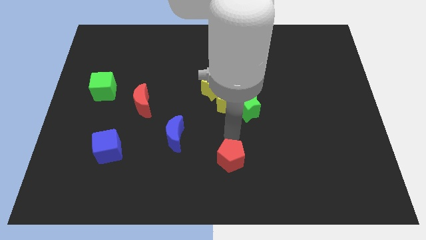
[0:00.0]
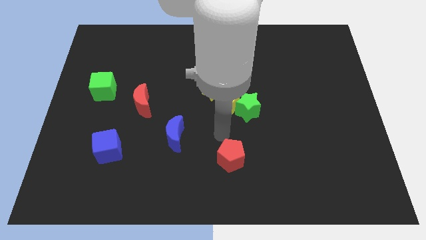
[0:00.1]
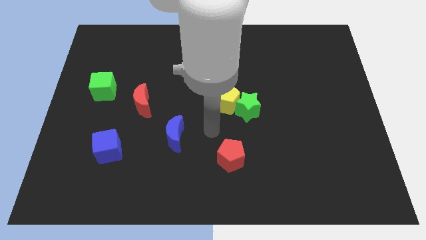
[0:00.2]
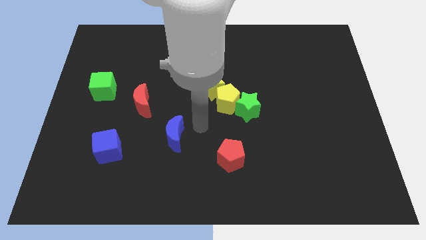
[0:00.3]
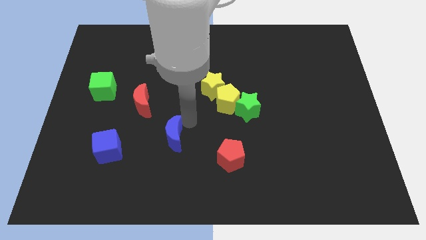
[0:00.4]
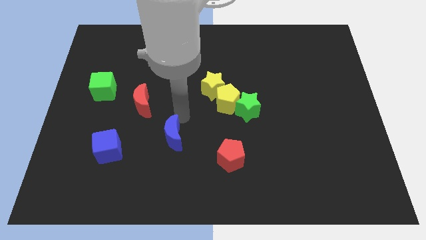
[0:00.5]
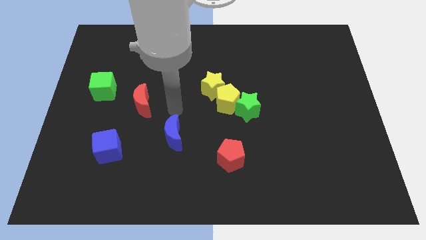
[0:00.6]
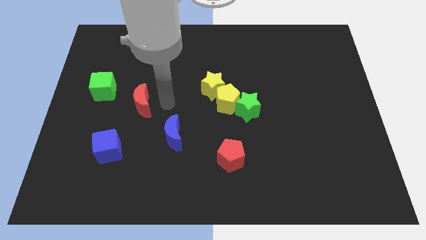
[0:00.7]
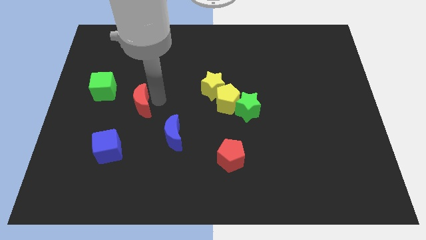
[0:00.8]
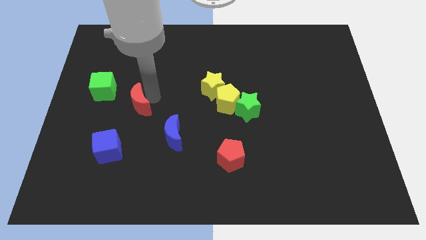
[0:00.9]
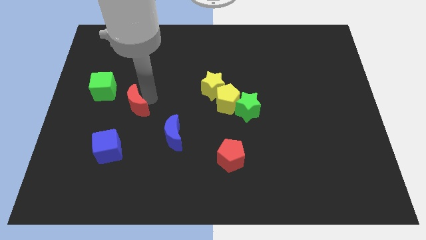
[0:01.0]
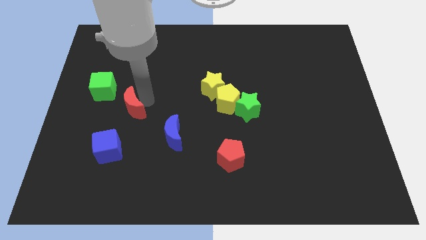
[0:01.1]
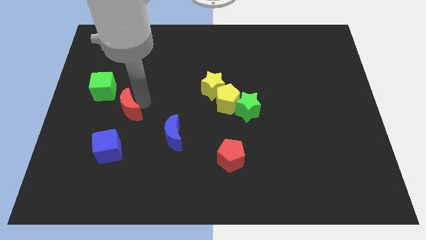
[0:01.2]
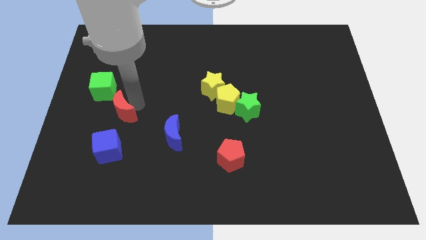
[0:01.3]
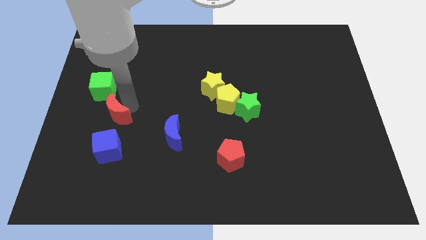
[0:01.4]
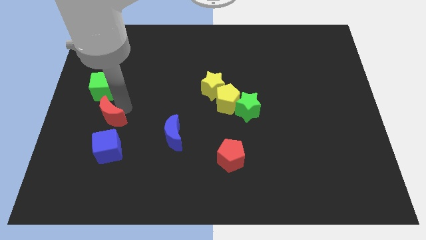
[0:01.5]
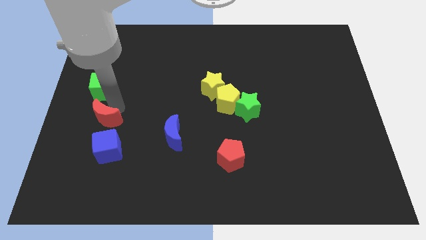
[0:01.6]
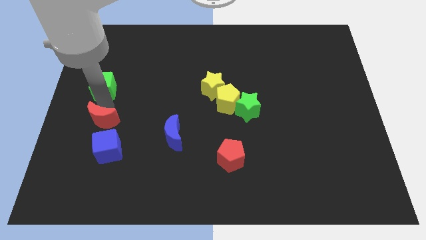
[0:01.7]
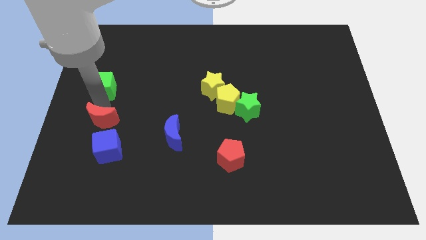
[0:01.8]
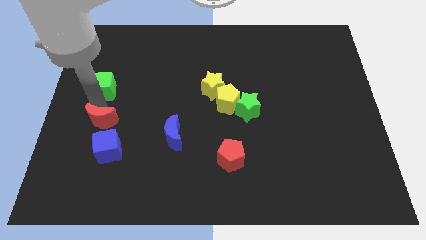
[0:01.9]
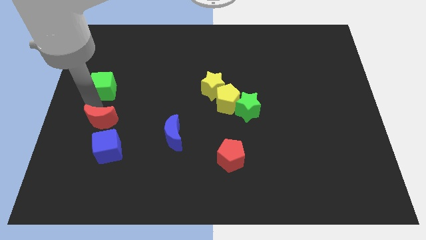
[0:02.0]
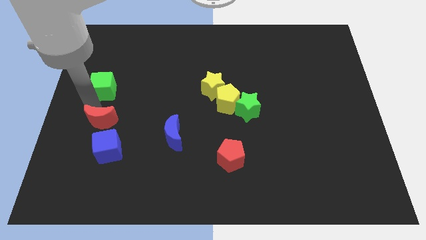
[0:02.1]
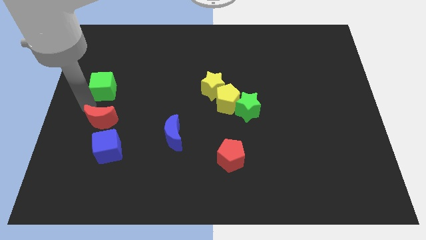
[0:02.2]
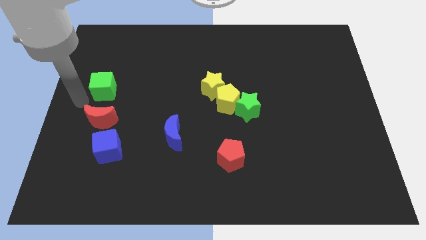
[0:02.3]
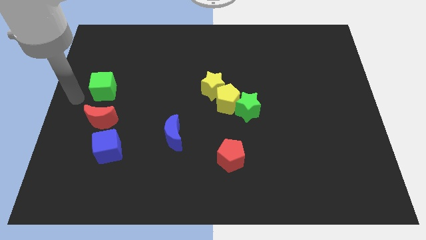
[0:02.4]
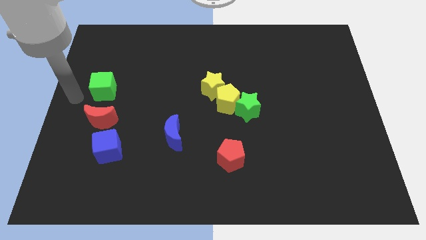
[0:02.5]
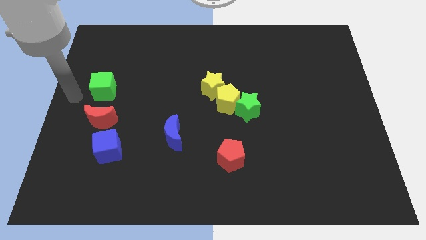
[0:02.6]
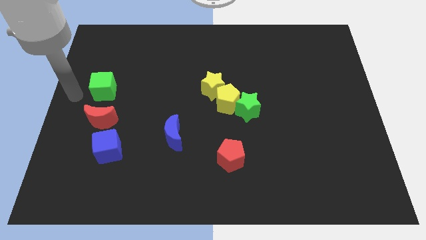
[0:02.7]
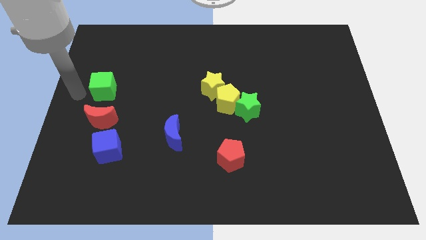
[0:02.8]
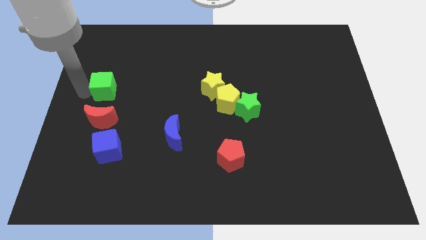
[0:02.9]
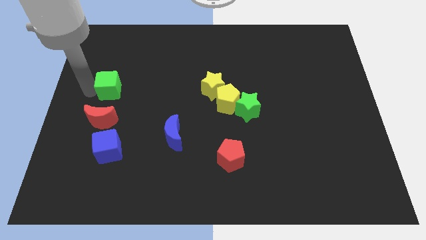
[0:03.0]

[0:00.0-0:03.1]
push the red crescent in between cubes

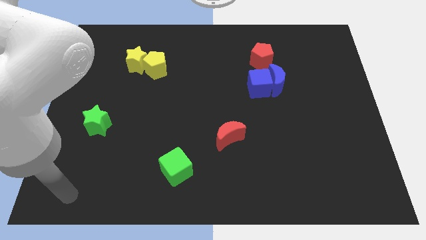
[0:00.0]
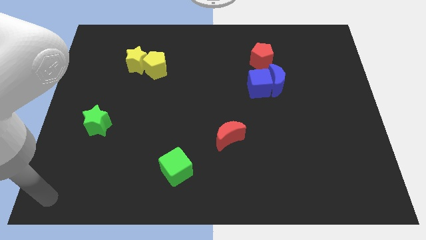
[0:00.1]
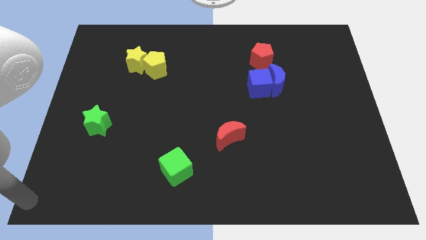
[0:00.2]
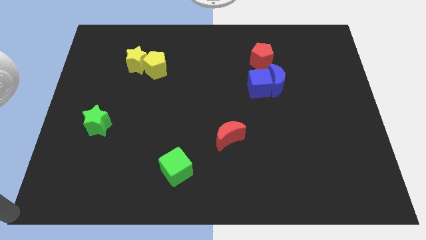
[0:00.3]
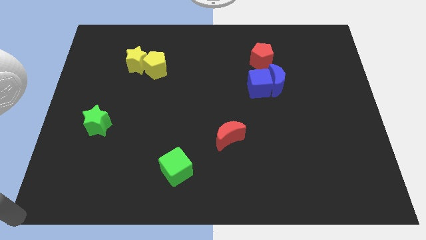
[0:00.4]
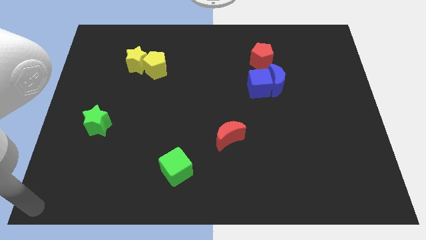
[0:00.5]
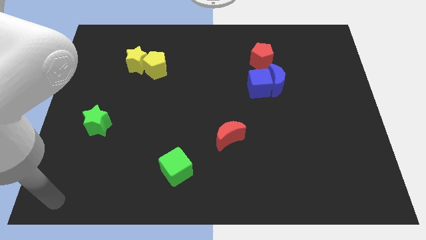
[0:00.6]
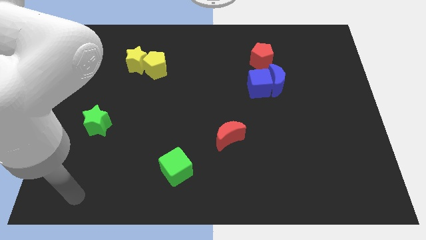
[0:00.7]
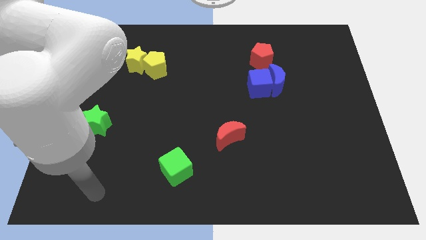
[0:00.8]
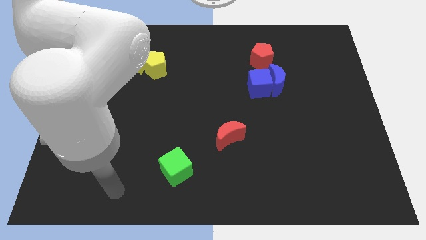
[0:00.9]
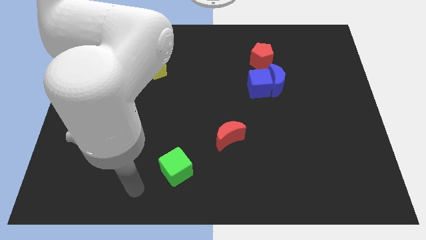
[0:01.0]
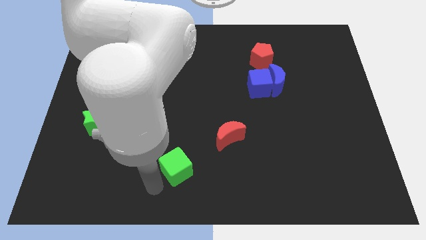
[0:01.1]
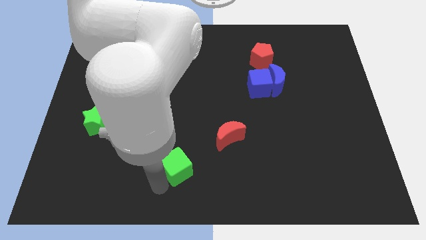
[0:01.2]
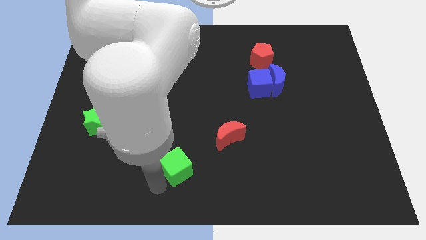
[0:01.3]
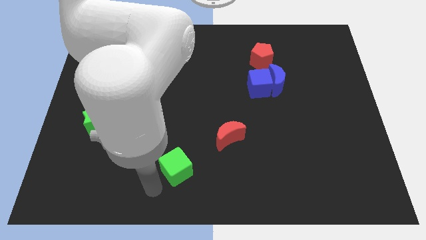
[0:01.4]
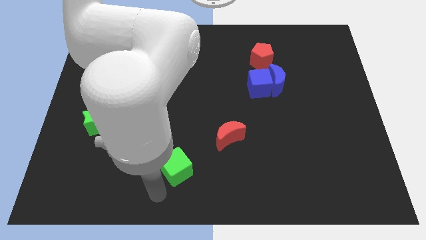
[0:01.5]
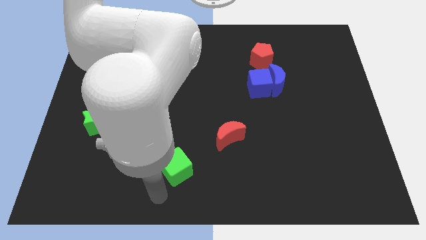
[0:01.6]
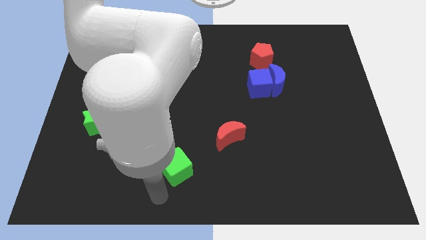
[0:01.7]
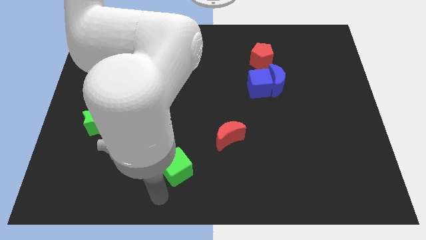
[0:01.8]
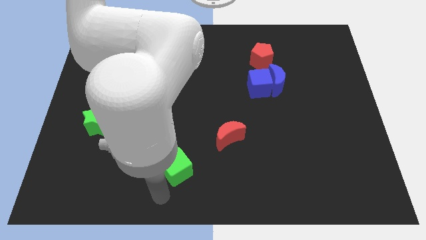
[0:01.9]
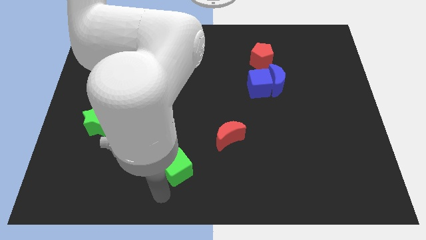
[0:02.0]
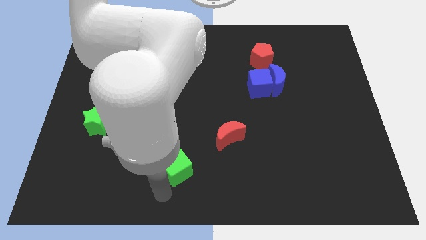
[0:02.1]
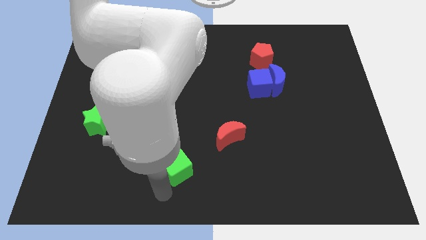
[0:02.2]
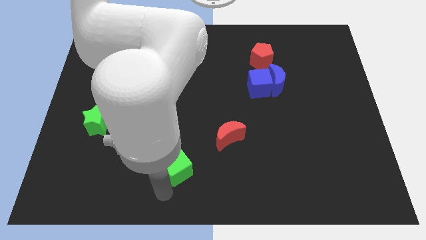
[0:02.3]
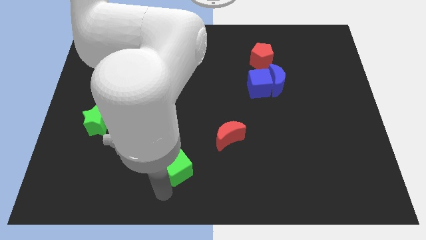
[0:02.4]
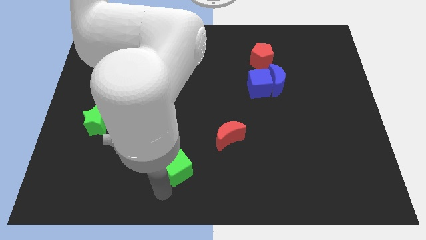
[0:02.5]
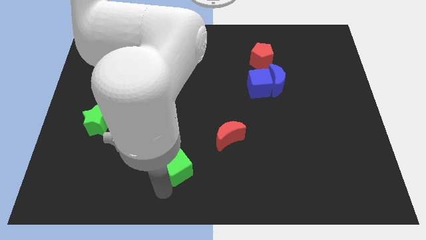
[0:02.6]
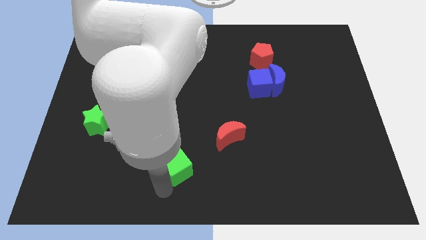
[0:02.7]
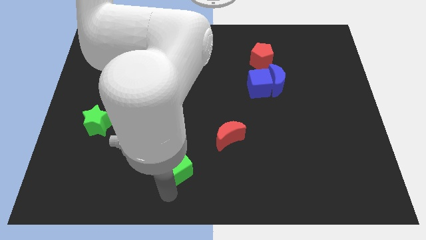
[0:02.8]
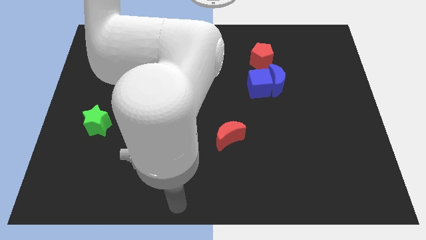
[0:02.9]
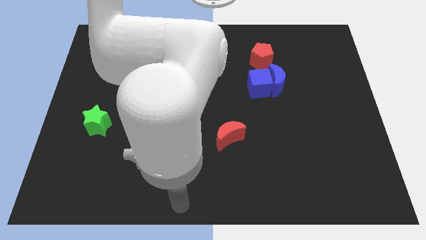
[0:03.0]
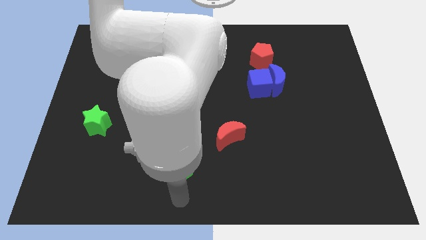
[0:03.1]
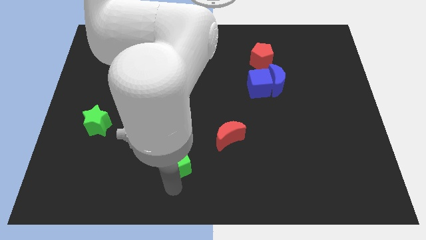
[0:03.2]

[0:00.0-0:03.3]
point your arm at the bottom of the green cube

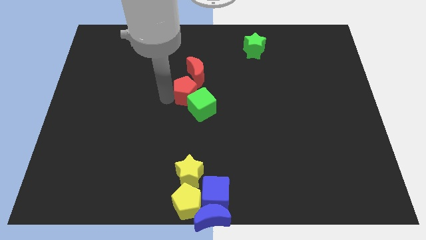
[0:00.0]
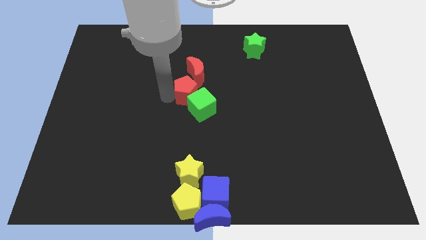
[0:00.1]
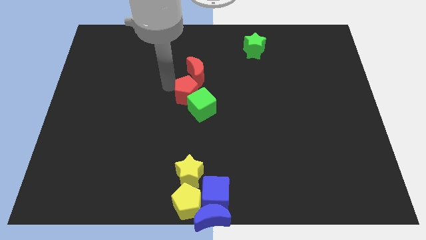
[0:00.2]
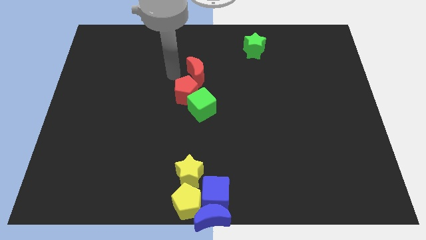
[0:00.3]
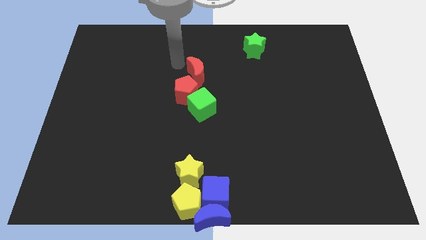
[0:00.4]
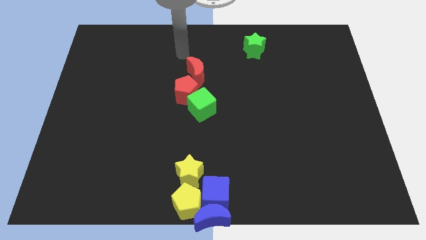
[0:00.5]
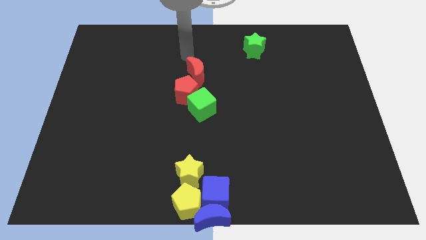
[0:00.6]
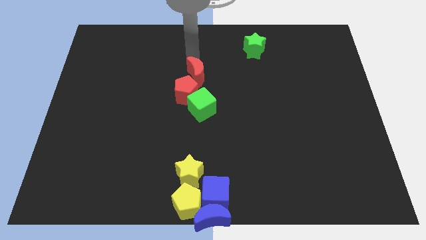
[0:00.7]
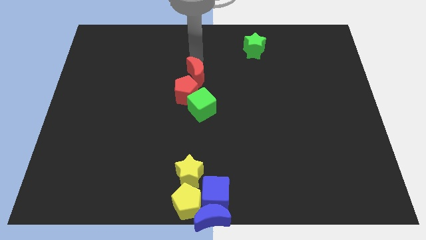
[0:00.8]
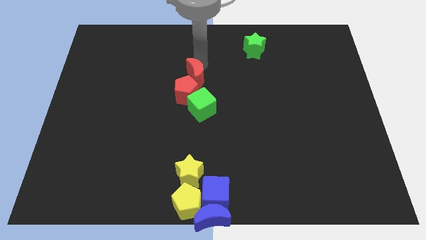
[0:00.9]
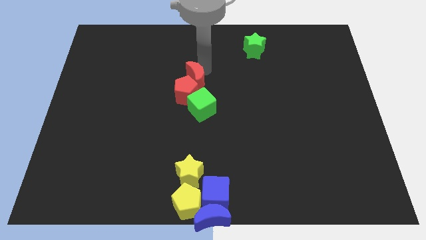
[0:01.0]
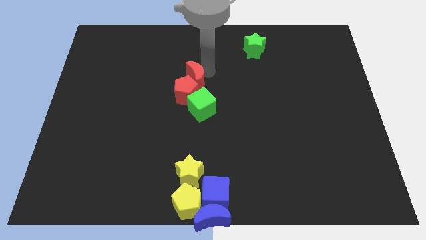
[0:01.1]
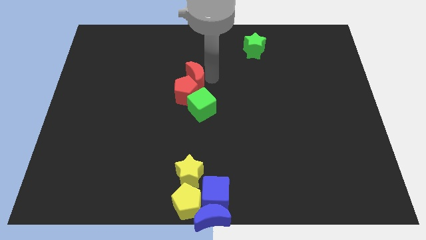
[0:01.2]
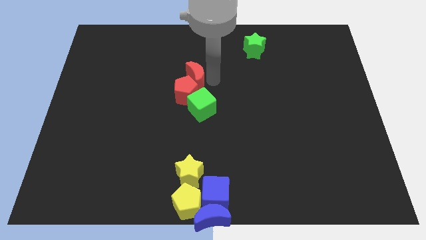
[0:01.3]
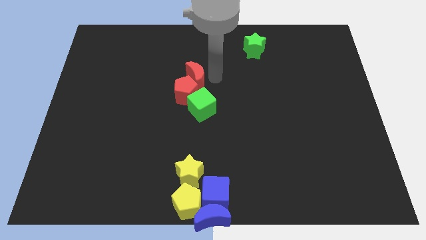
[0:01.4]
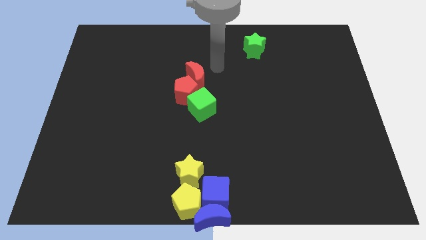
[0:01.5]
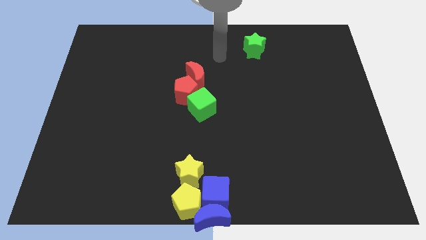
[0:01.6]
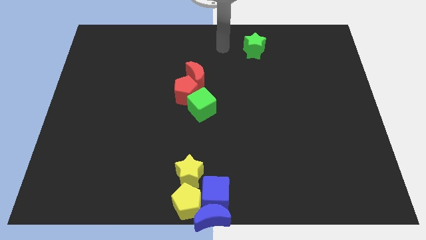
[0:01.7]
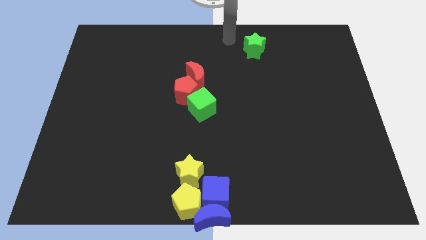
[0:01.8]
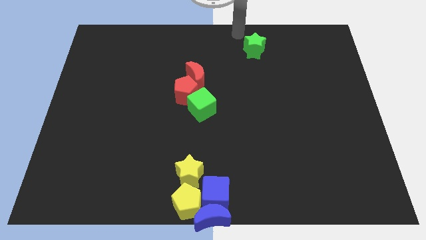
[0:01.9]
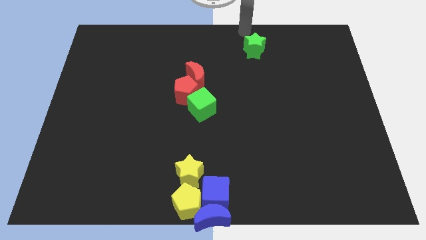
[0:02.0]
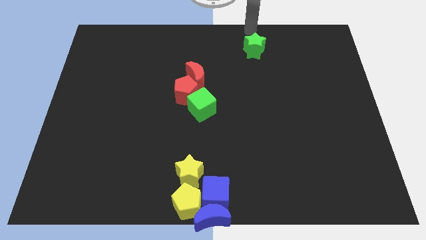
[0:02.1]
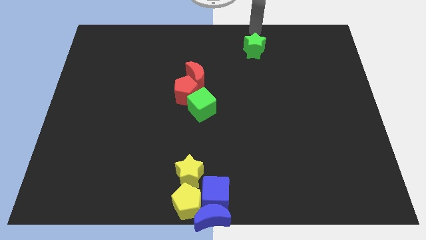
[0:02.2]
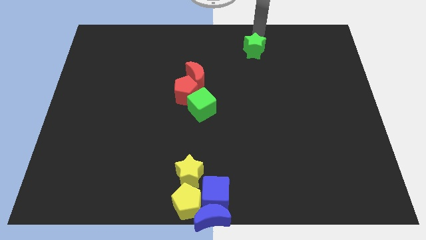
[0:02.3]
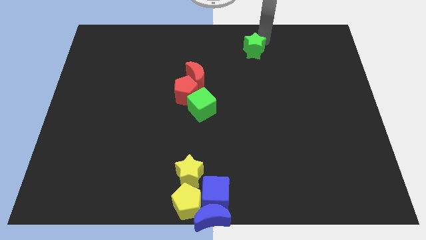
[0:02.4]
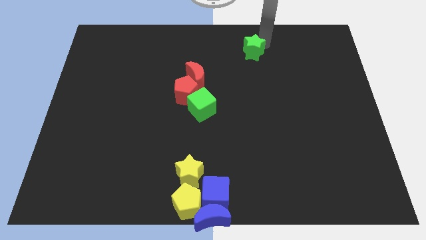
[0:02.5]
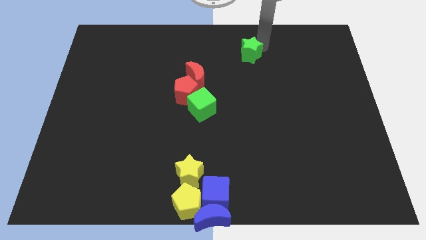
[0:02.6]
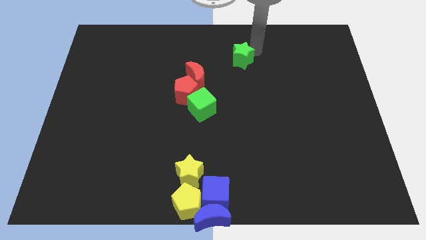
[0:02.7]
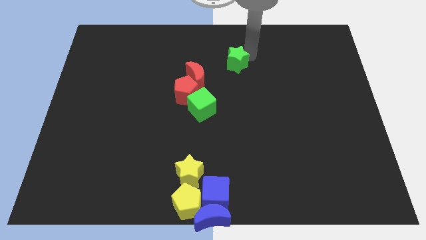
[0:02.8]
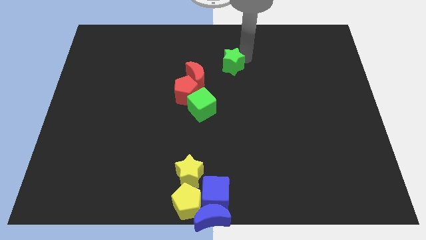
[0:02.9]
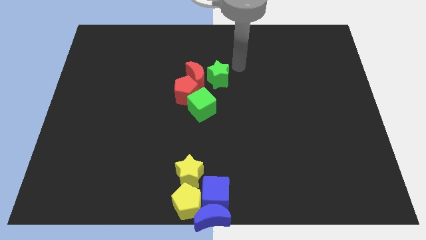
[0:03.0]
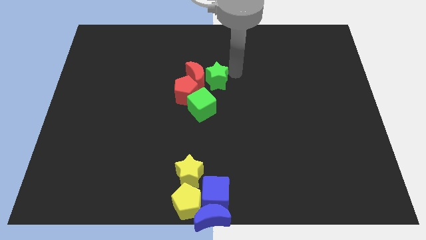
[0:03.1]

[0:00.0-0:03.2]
place the green star right to the red moon
